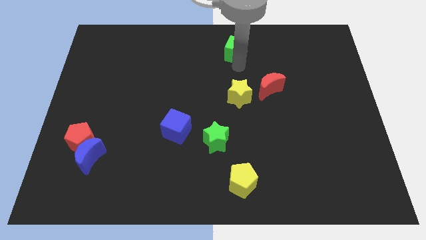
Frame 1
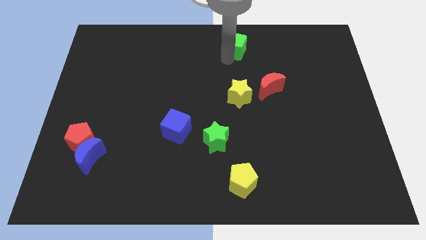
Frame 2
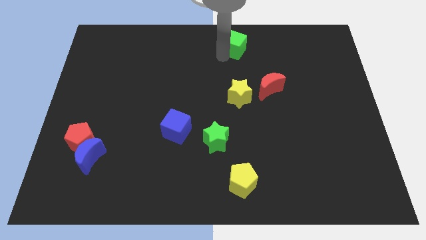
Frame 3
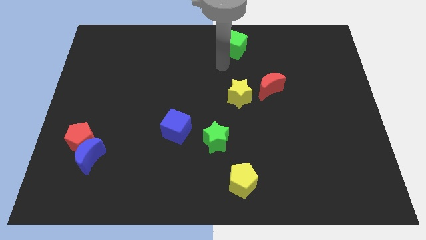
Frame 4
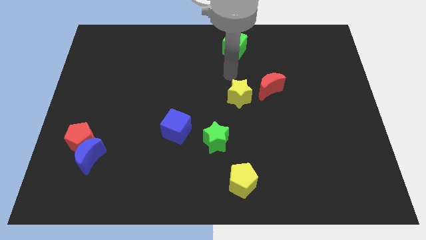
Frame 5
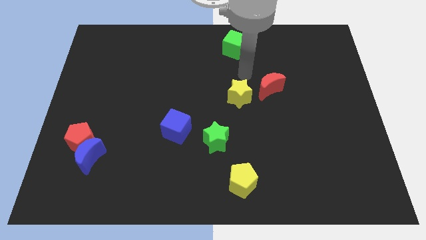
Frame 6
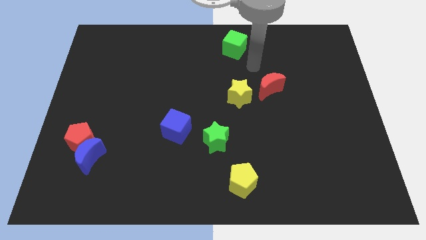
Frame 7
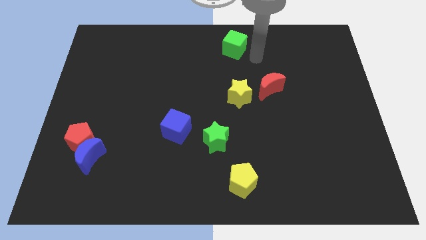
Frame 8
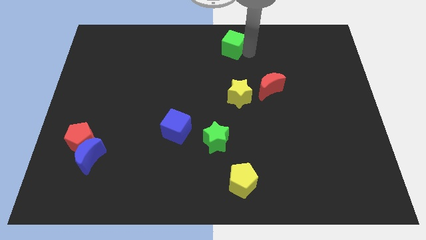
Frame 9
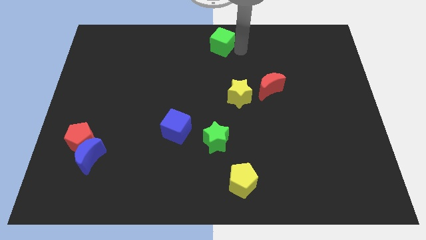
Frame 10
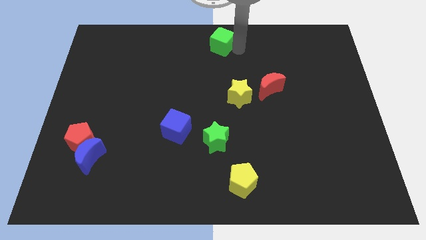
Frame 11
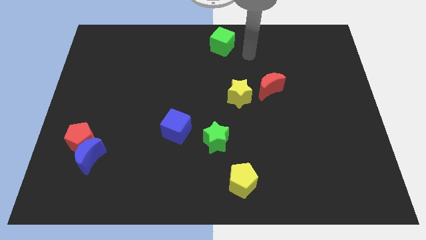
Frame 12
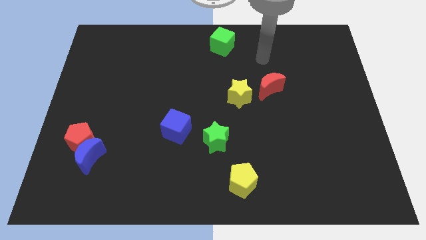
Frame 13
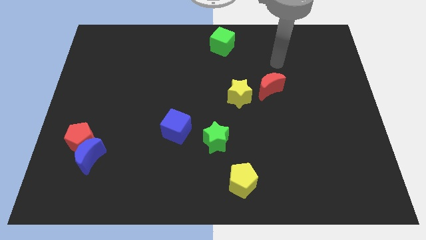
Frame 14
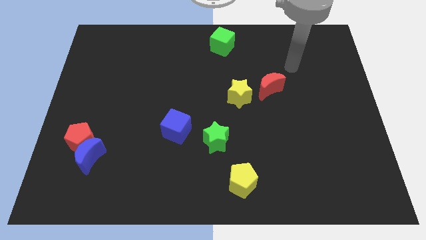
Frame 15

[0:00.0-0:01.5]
push the green cube slightly to the left

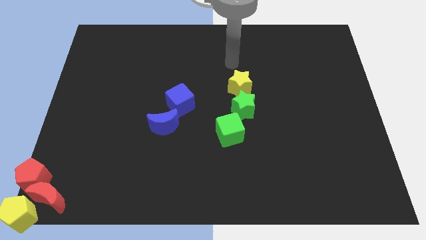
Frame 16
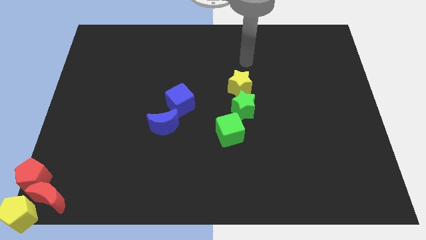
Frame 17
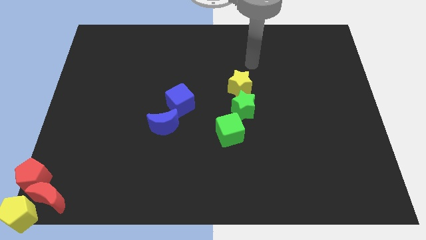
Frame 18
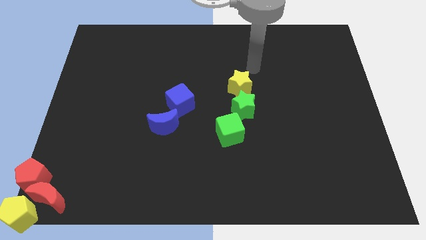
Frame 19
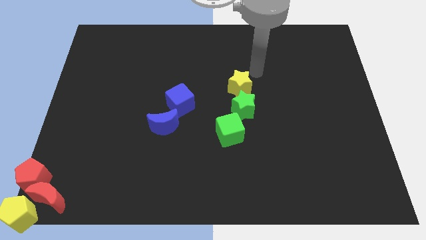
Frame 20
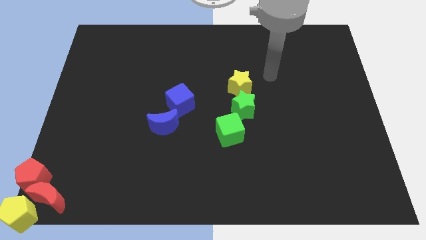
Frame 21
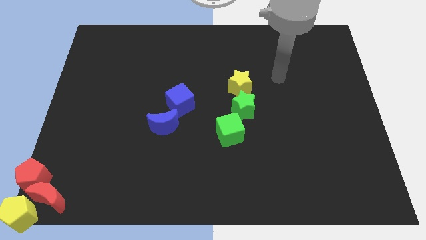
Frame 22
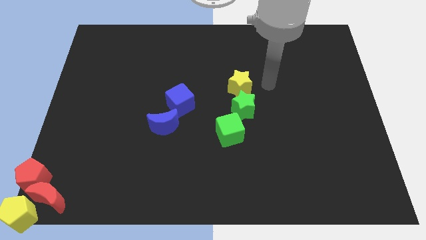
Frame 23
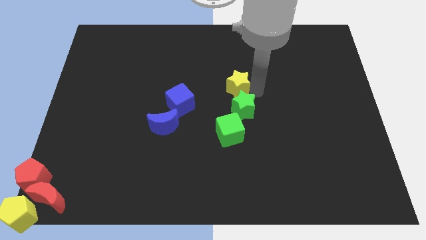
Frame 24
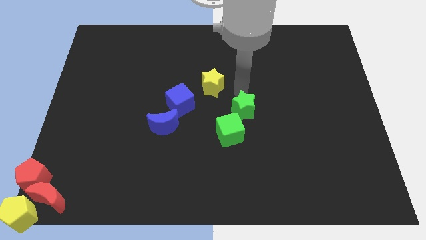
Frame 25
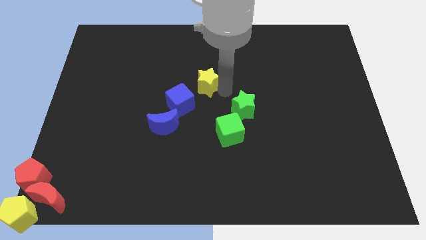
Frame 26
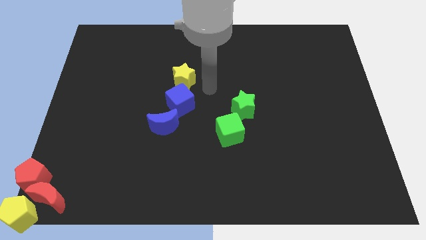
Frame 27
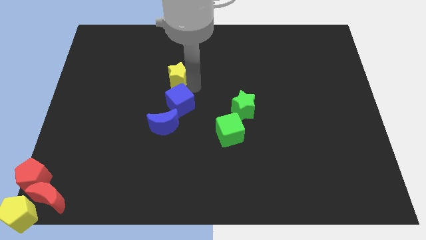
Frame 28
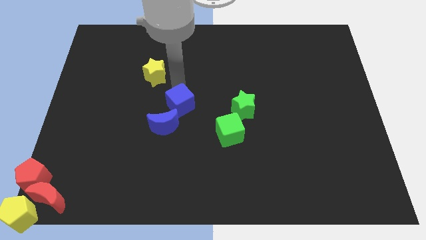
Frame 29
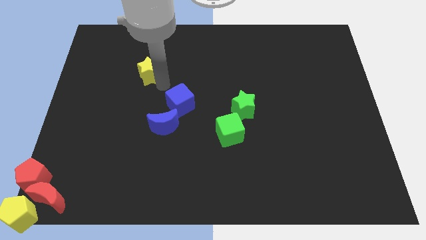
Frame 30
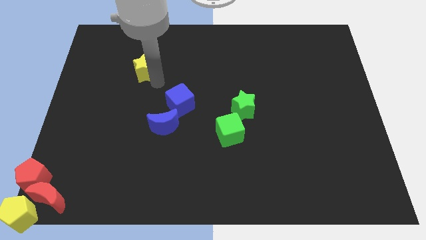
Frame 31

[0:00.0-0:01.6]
place the yellow star above the blue moon

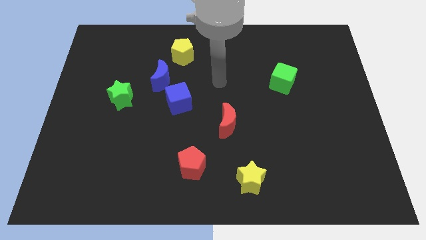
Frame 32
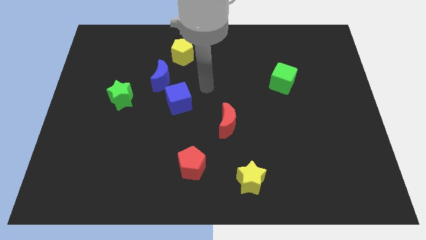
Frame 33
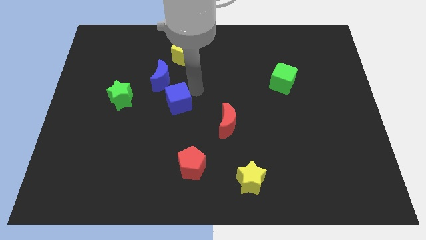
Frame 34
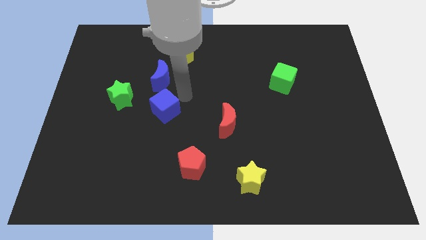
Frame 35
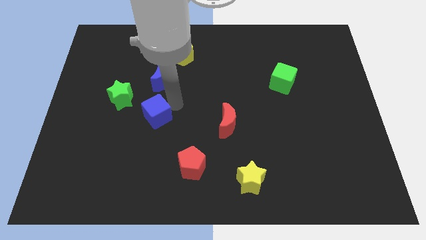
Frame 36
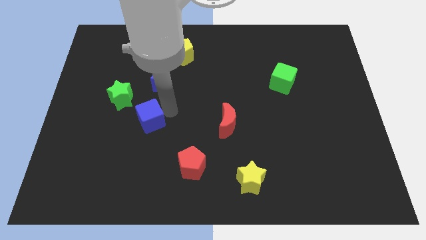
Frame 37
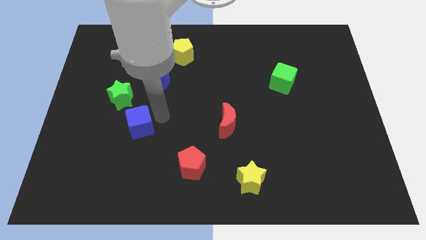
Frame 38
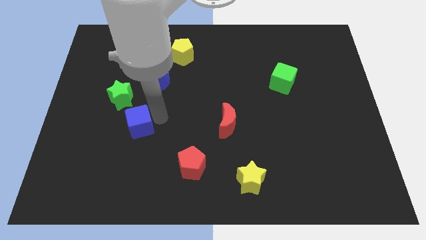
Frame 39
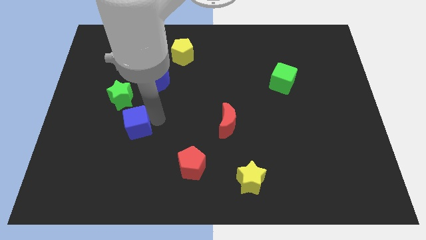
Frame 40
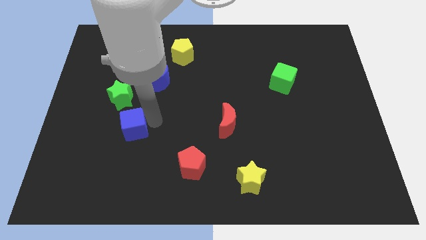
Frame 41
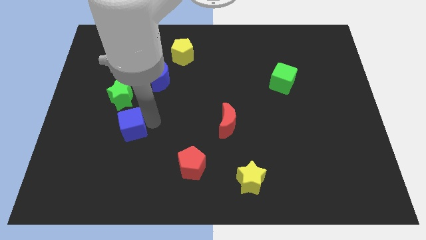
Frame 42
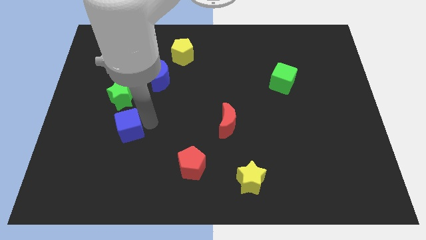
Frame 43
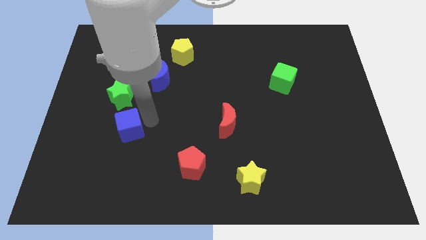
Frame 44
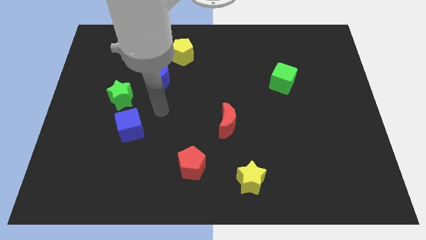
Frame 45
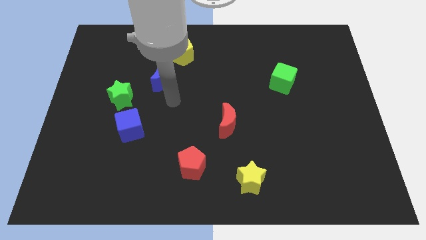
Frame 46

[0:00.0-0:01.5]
move the blue cube below the green star

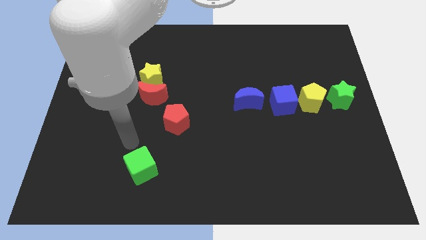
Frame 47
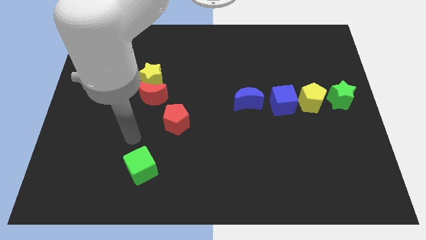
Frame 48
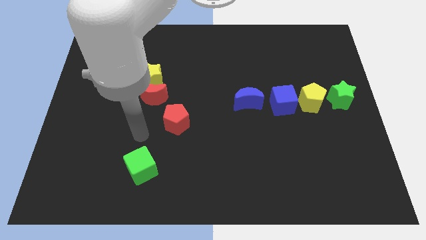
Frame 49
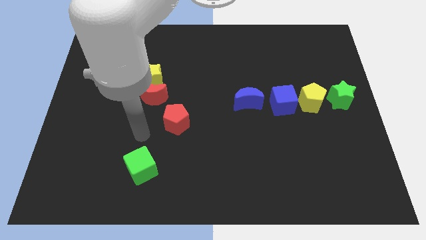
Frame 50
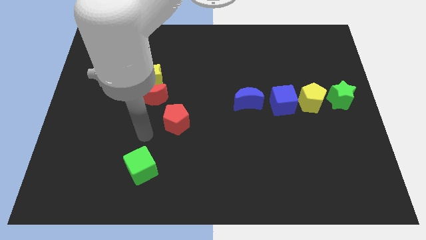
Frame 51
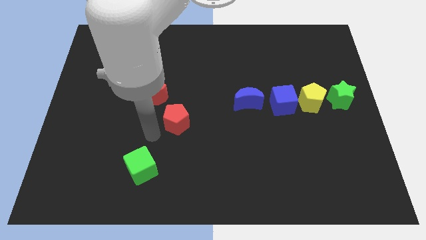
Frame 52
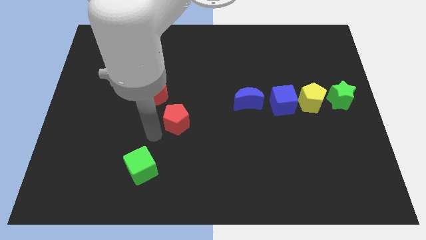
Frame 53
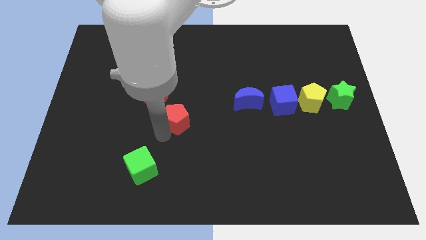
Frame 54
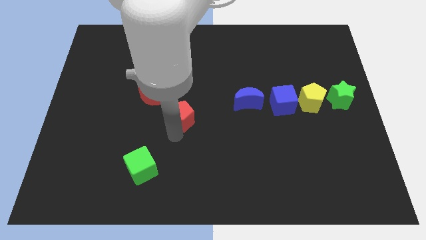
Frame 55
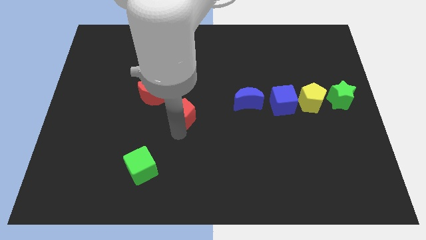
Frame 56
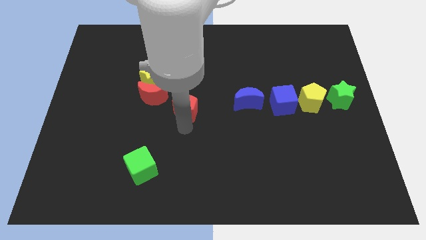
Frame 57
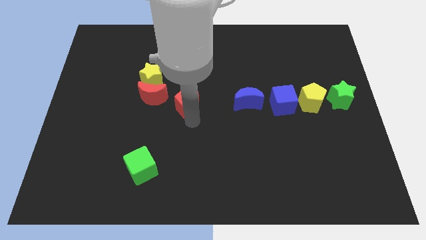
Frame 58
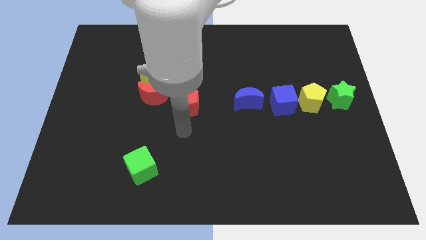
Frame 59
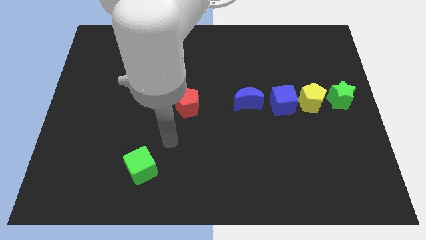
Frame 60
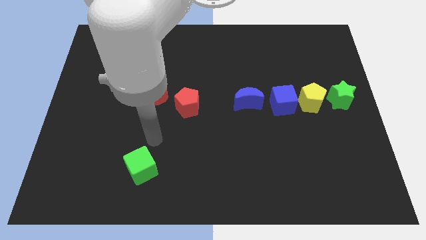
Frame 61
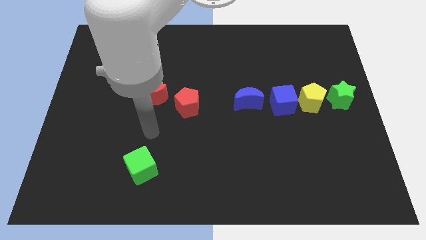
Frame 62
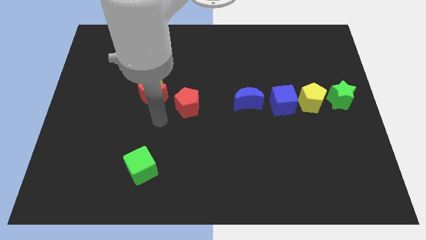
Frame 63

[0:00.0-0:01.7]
place the red pentagon at center of the board

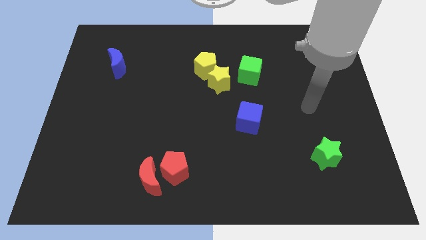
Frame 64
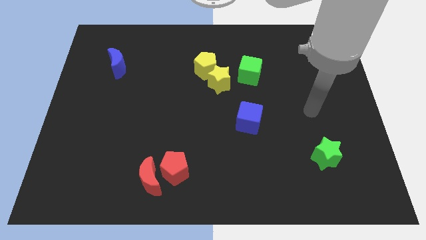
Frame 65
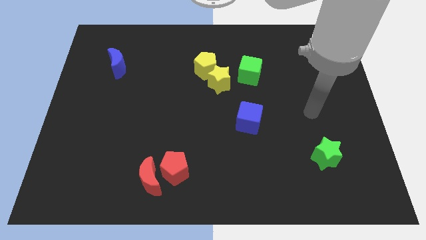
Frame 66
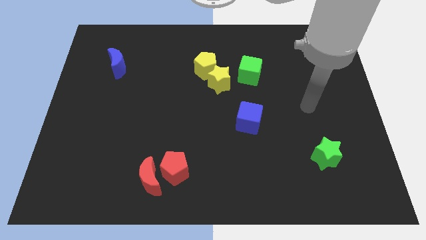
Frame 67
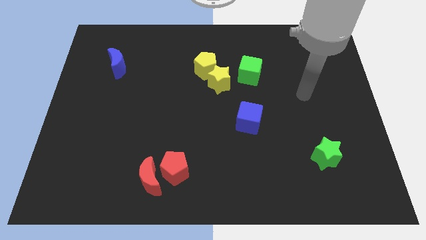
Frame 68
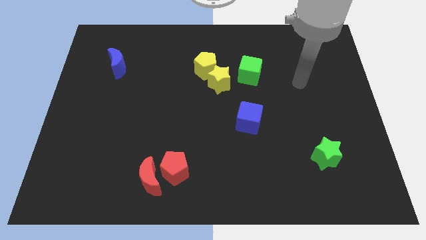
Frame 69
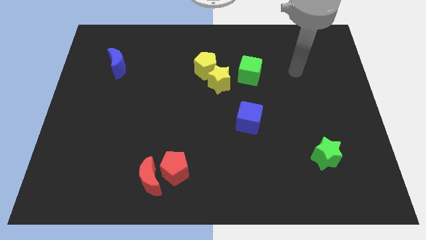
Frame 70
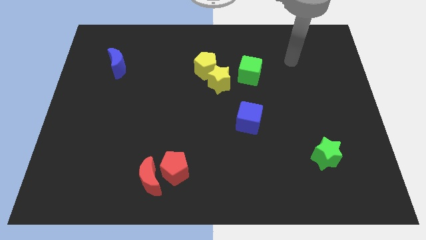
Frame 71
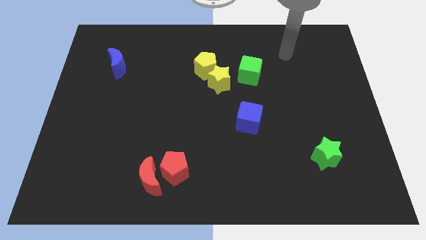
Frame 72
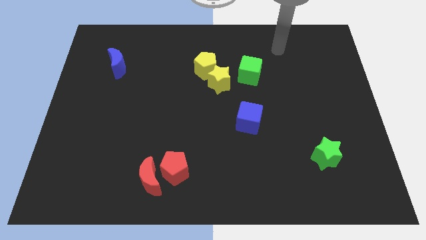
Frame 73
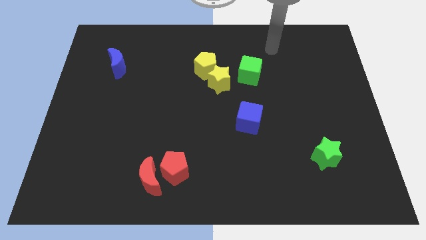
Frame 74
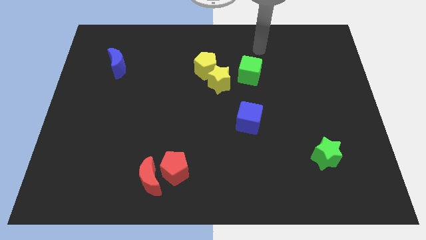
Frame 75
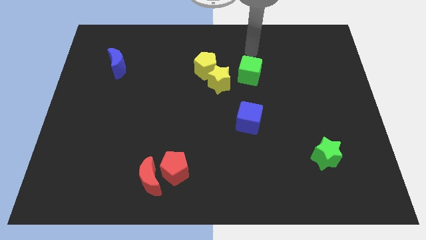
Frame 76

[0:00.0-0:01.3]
move your arm towards the green cube

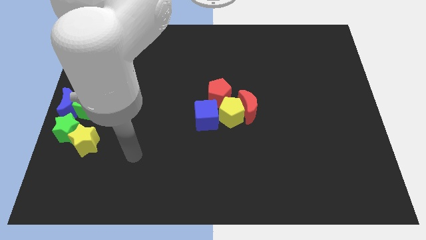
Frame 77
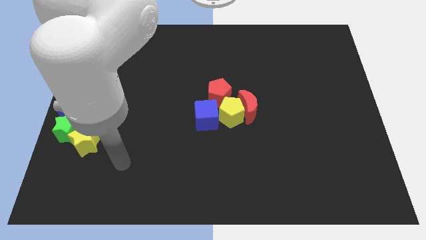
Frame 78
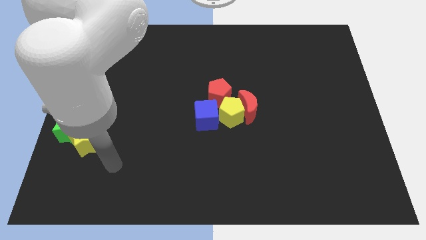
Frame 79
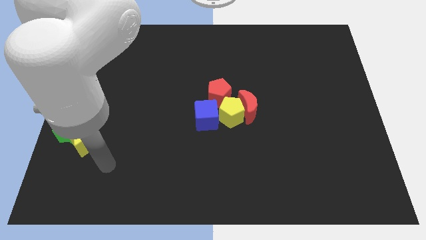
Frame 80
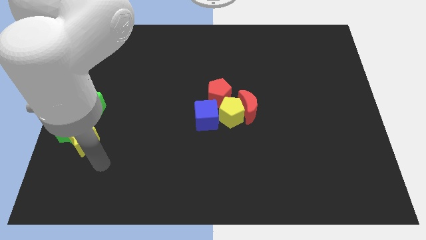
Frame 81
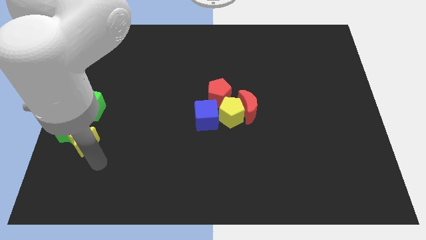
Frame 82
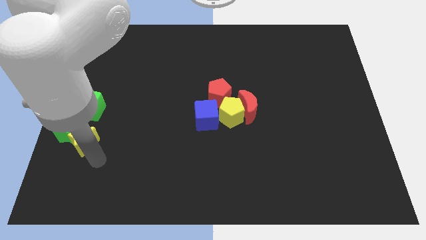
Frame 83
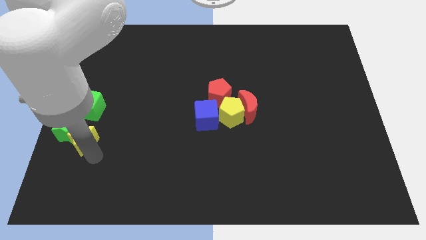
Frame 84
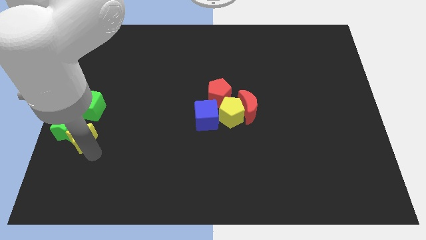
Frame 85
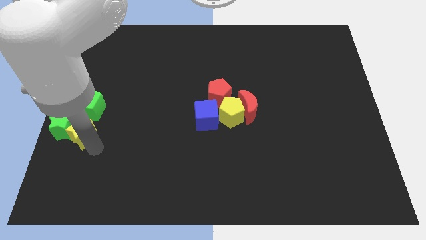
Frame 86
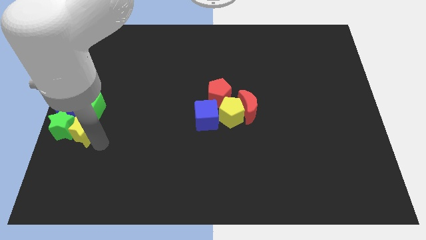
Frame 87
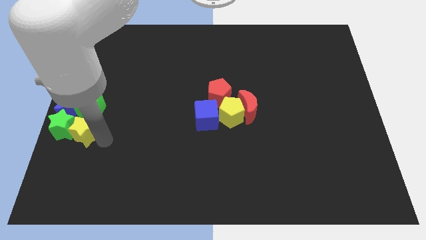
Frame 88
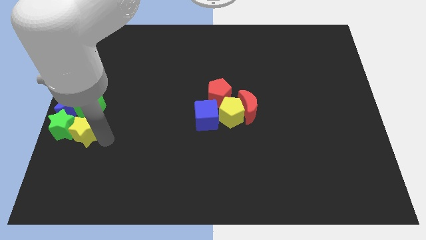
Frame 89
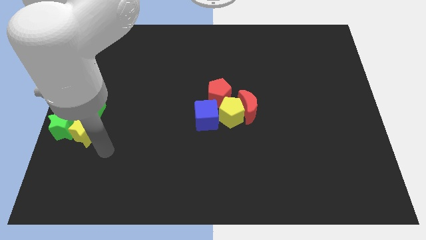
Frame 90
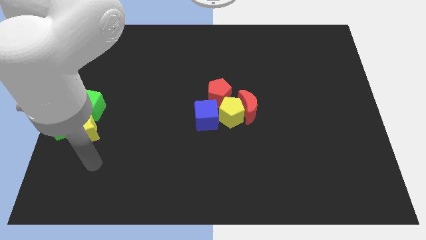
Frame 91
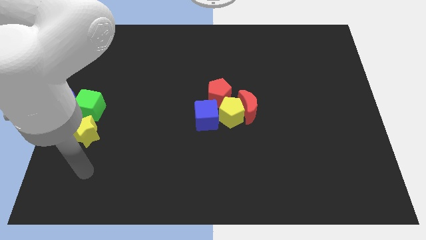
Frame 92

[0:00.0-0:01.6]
push the yellow star into the green star
